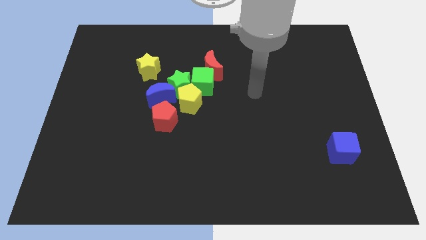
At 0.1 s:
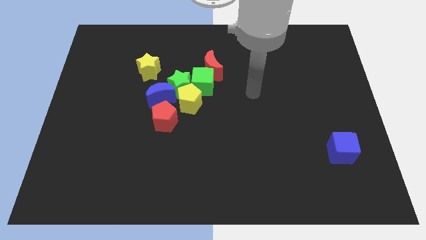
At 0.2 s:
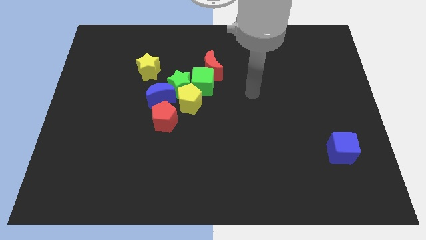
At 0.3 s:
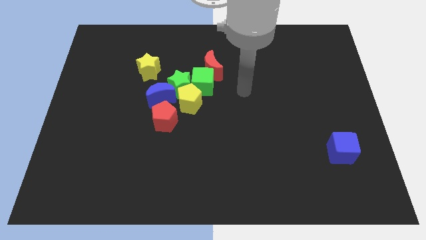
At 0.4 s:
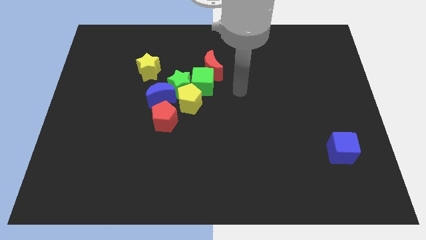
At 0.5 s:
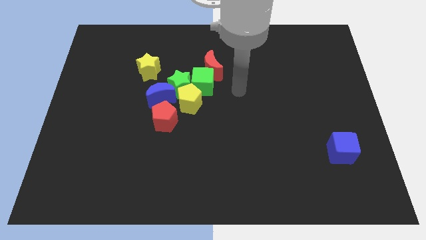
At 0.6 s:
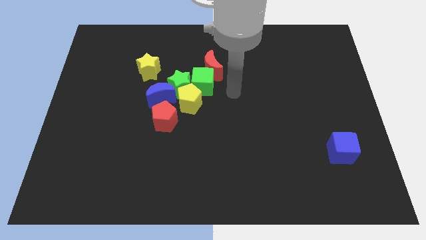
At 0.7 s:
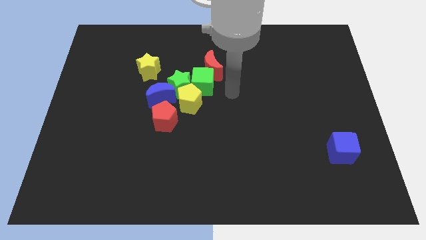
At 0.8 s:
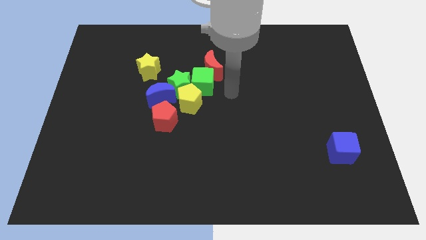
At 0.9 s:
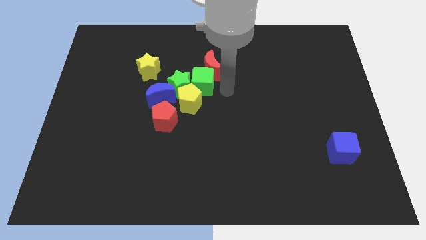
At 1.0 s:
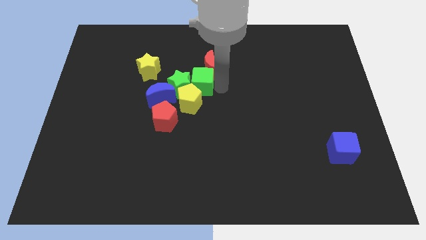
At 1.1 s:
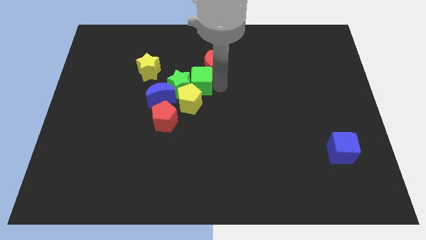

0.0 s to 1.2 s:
move the arm close to the right of the green cube

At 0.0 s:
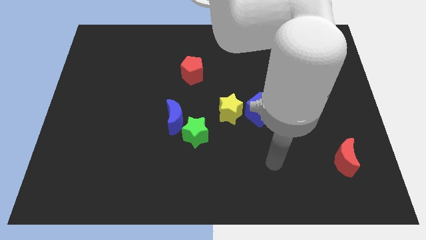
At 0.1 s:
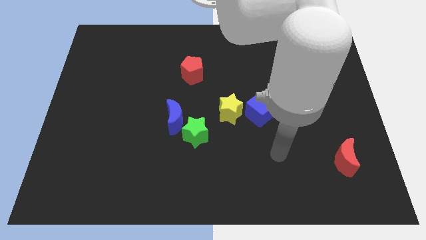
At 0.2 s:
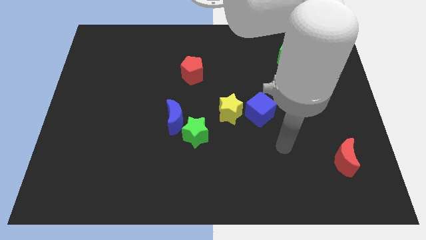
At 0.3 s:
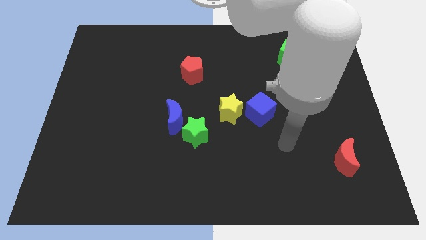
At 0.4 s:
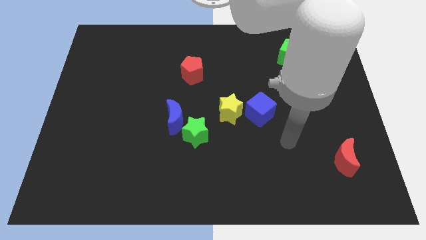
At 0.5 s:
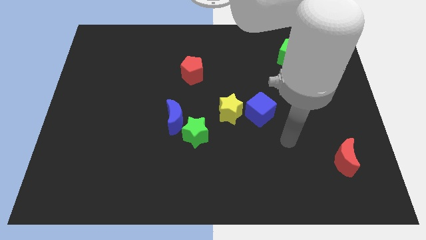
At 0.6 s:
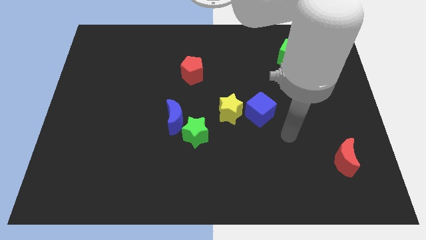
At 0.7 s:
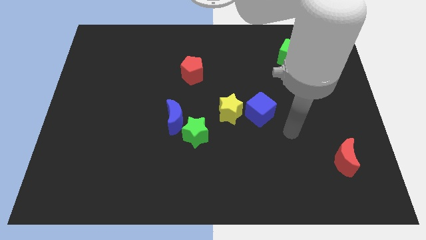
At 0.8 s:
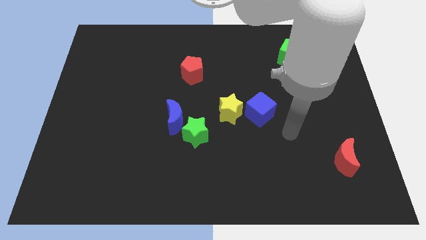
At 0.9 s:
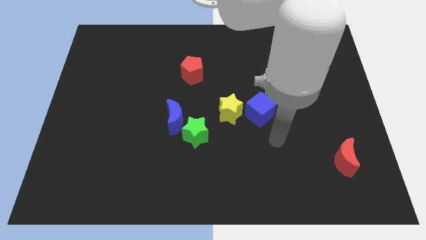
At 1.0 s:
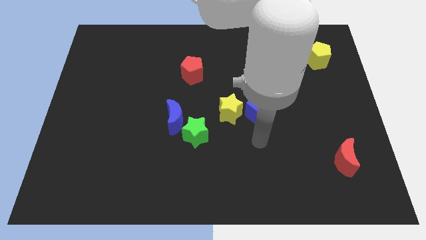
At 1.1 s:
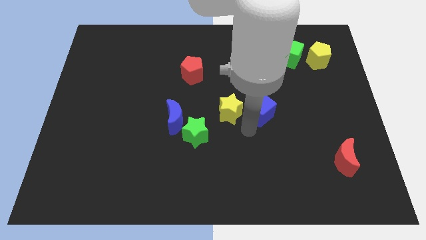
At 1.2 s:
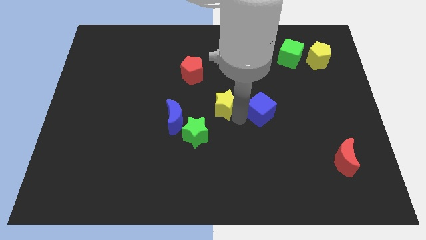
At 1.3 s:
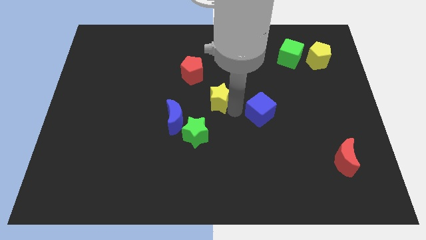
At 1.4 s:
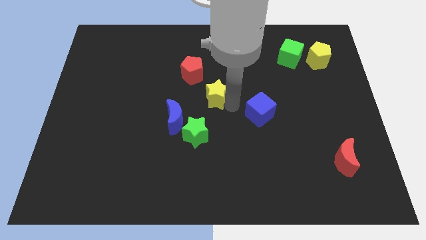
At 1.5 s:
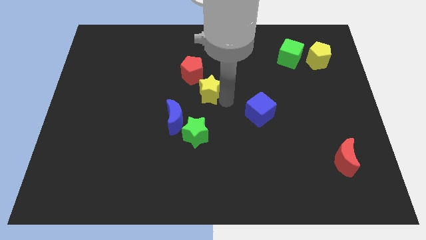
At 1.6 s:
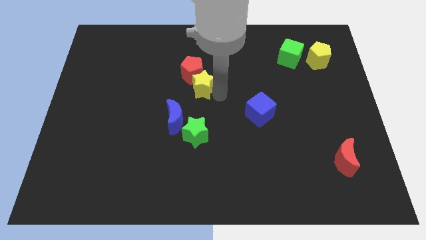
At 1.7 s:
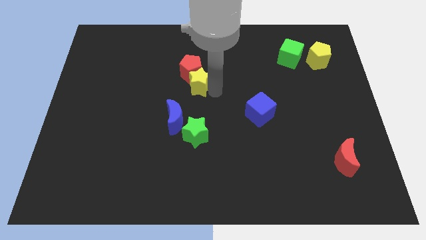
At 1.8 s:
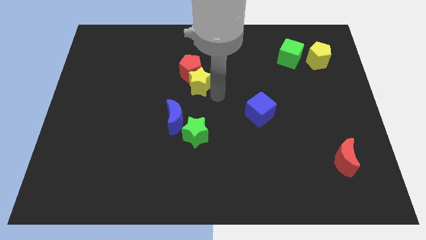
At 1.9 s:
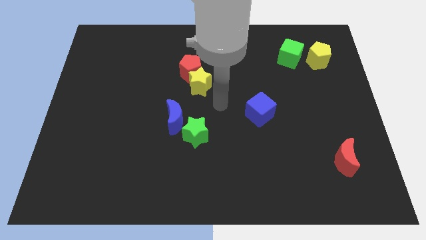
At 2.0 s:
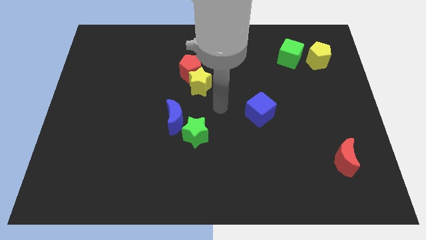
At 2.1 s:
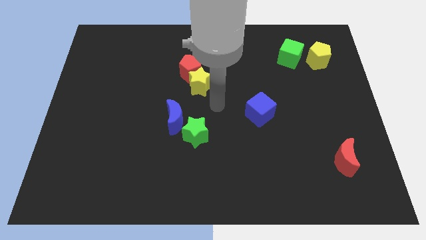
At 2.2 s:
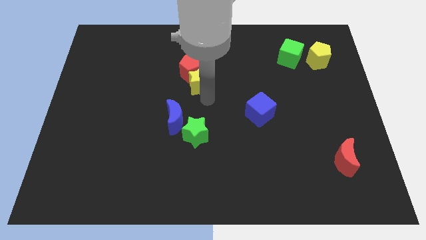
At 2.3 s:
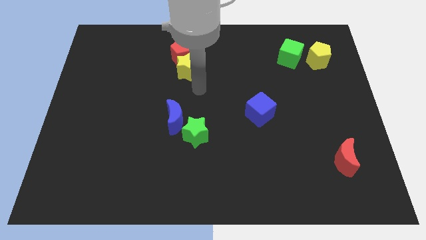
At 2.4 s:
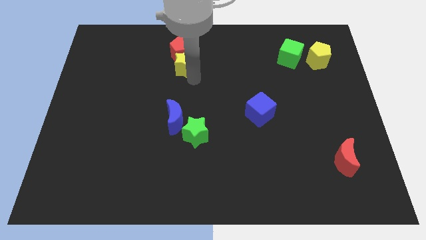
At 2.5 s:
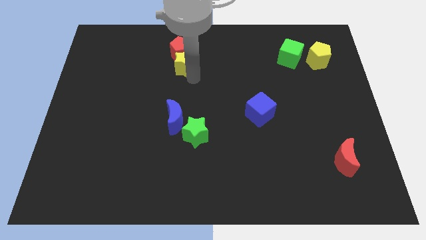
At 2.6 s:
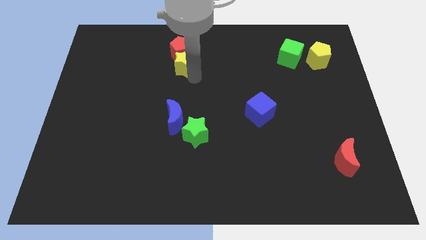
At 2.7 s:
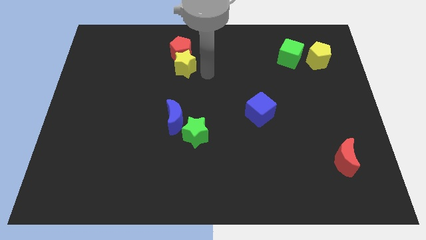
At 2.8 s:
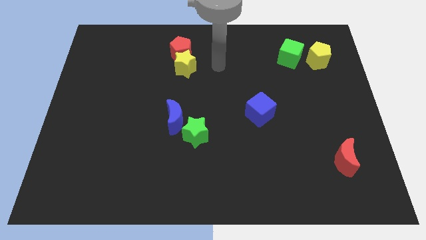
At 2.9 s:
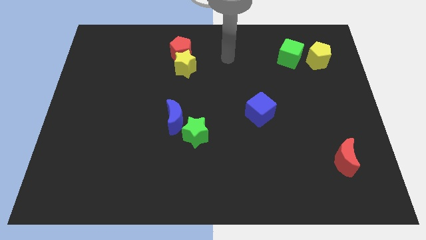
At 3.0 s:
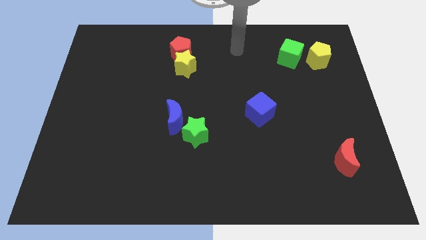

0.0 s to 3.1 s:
push the yellow star into the red pentagon

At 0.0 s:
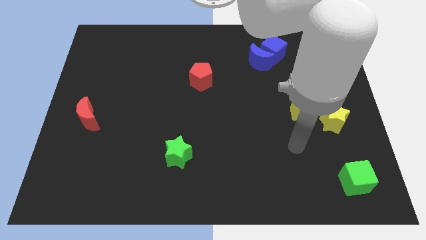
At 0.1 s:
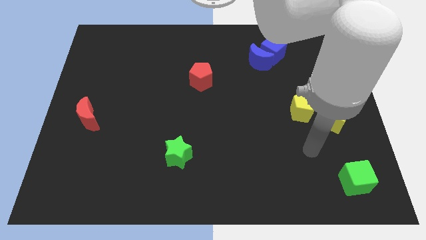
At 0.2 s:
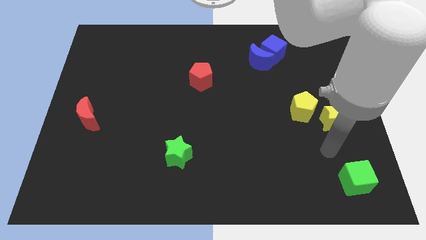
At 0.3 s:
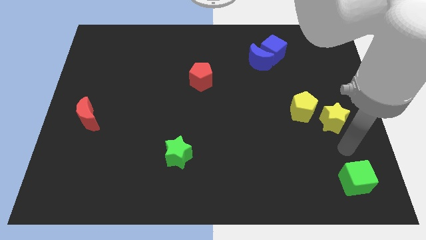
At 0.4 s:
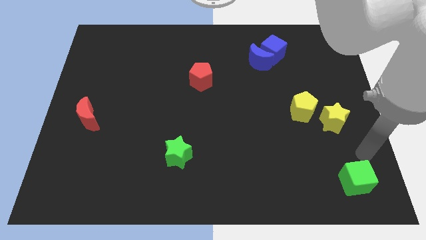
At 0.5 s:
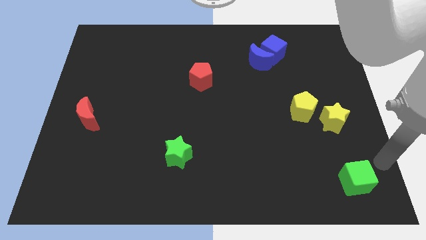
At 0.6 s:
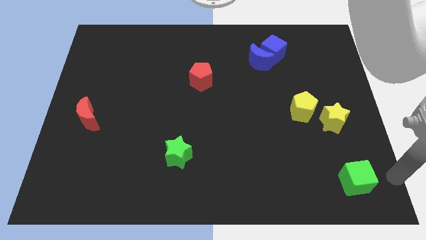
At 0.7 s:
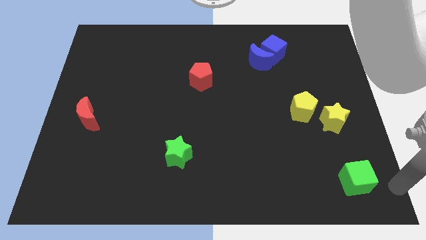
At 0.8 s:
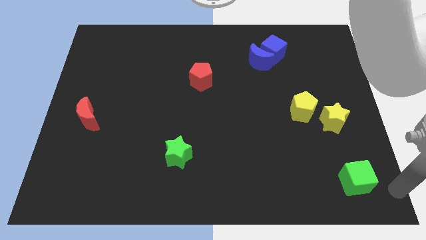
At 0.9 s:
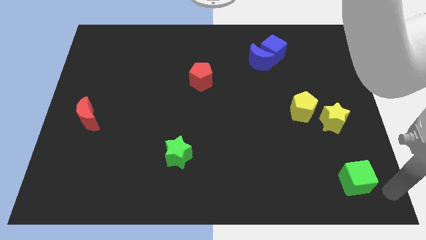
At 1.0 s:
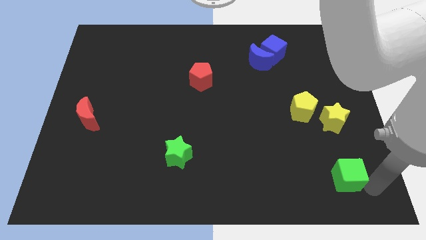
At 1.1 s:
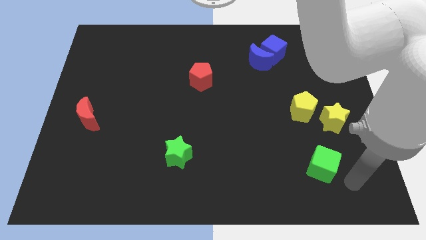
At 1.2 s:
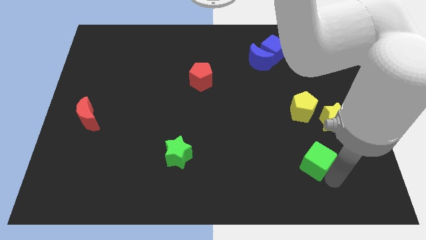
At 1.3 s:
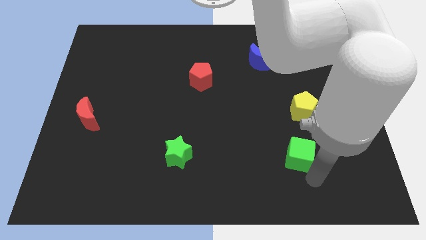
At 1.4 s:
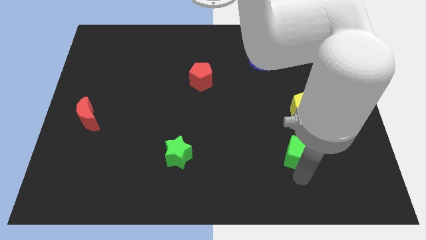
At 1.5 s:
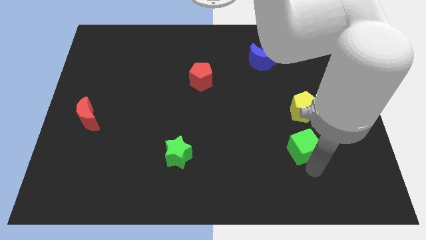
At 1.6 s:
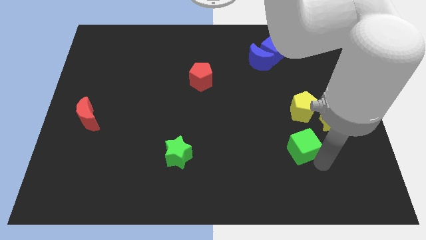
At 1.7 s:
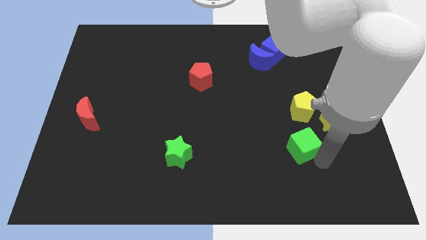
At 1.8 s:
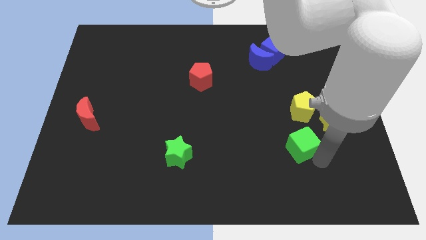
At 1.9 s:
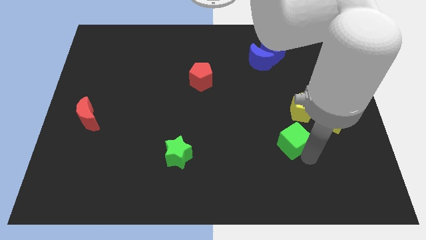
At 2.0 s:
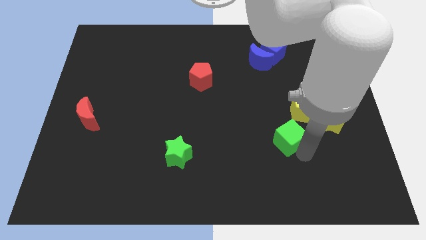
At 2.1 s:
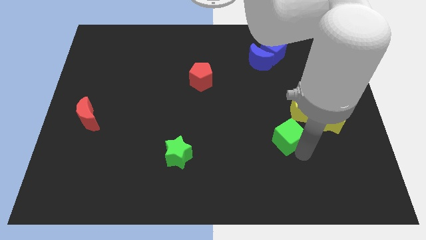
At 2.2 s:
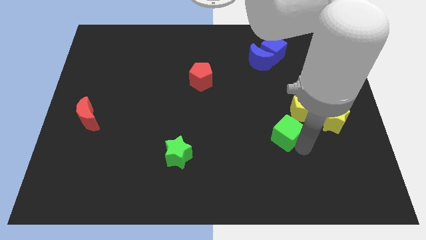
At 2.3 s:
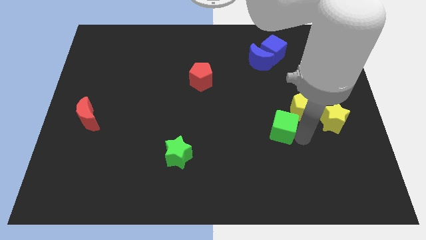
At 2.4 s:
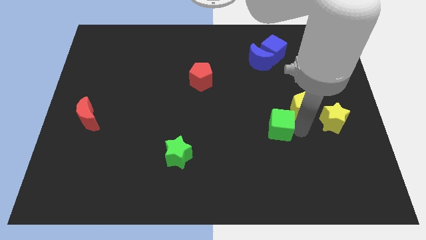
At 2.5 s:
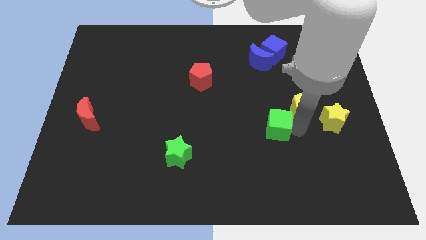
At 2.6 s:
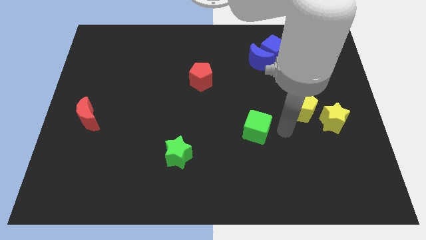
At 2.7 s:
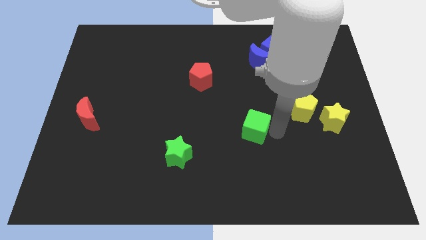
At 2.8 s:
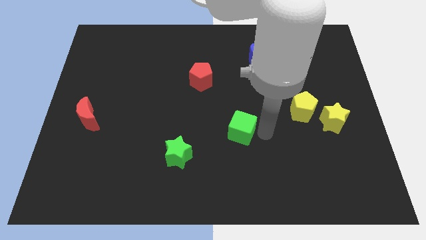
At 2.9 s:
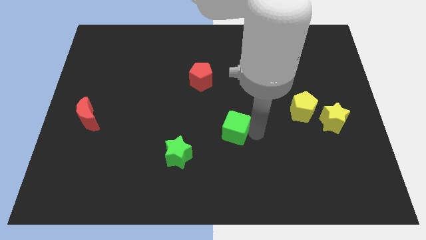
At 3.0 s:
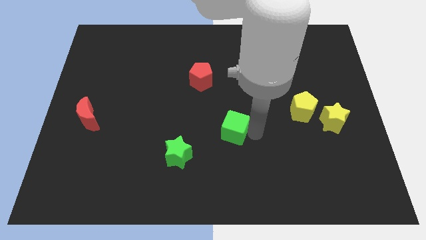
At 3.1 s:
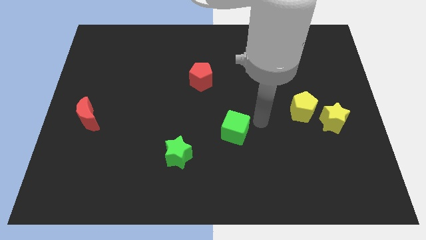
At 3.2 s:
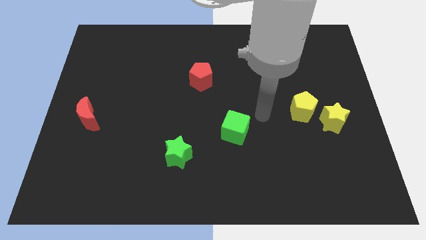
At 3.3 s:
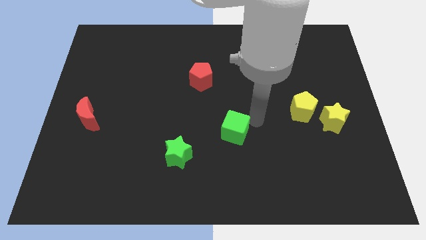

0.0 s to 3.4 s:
move the green cube towards the green star

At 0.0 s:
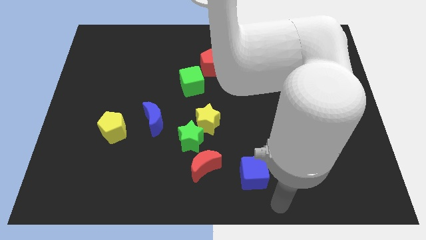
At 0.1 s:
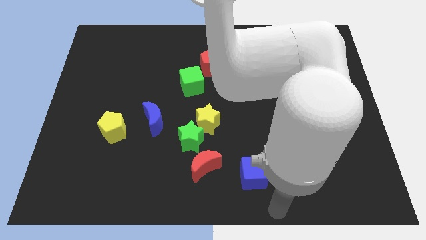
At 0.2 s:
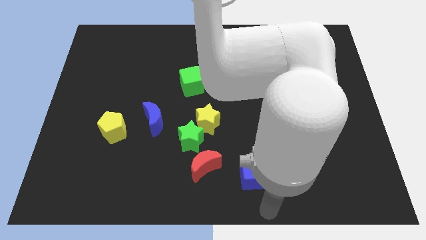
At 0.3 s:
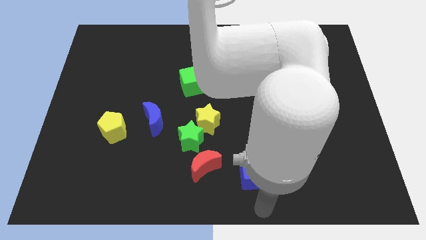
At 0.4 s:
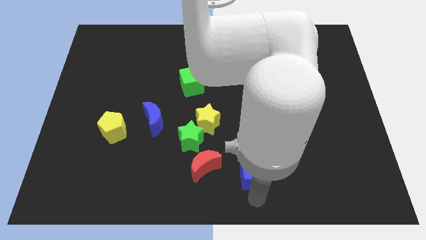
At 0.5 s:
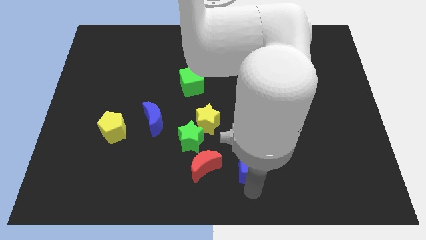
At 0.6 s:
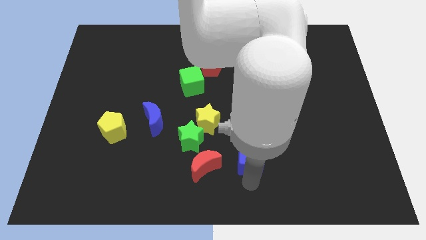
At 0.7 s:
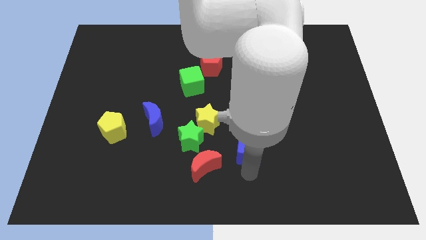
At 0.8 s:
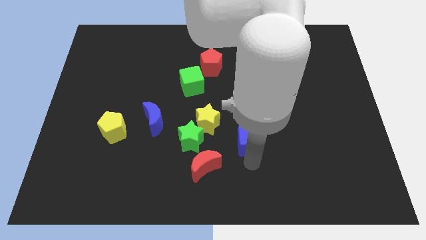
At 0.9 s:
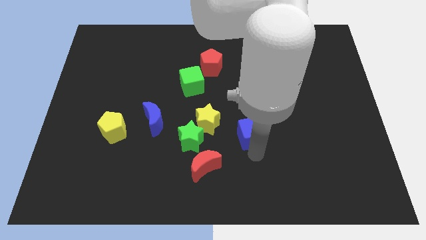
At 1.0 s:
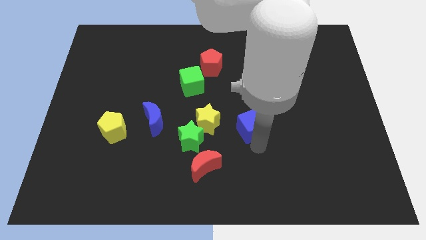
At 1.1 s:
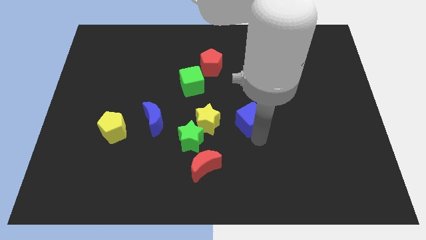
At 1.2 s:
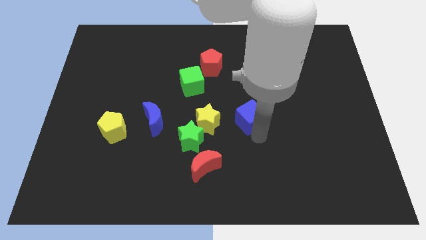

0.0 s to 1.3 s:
slide the blue cube slightly towards up
